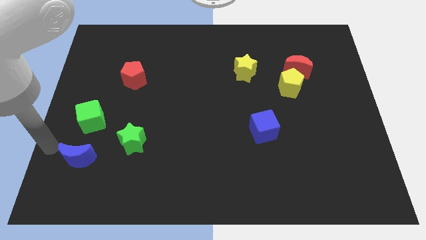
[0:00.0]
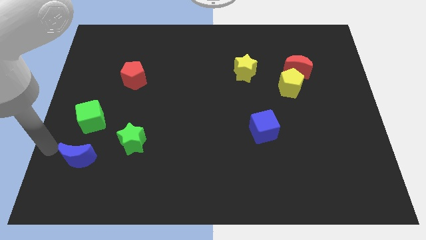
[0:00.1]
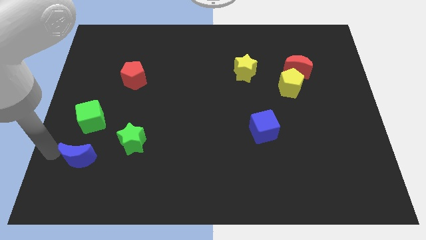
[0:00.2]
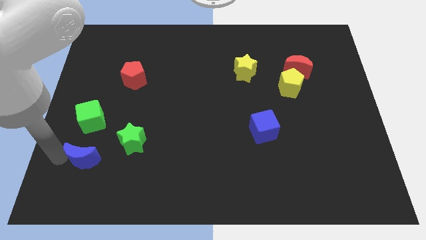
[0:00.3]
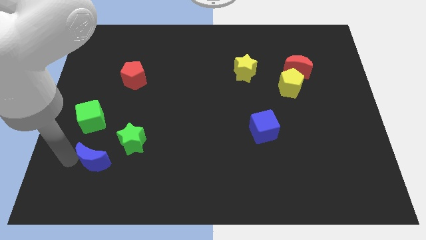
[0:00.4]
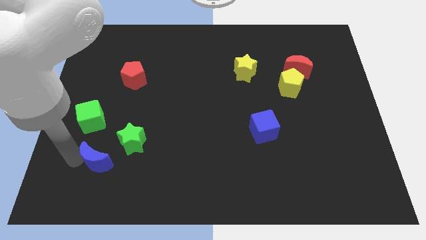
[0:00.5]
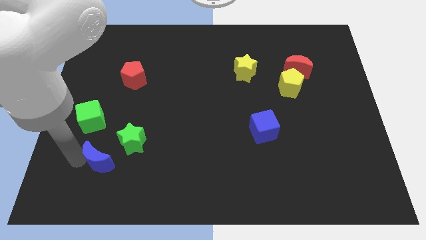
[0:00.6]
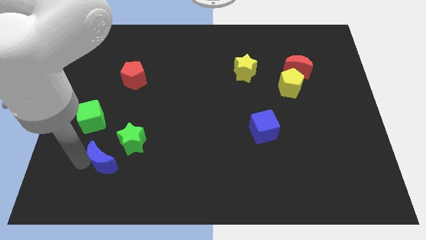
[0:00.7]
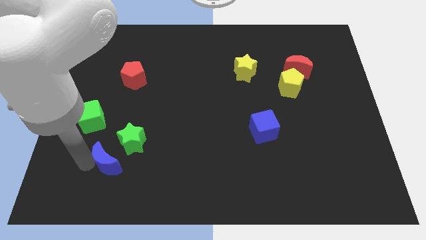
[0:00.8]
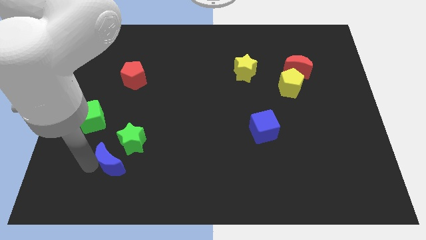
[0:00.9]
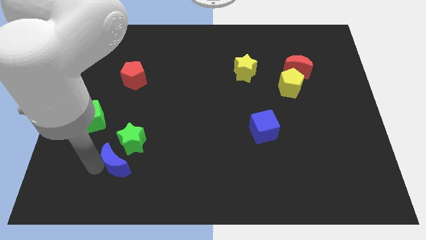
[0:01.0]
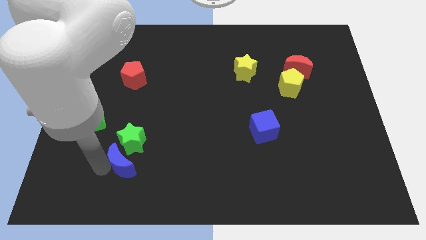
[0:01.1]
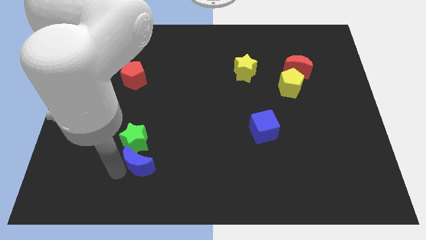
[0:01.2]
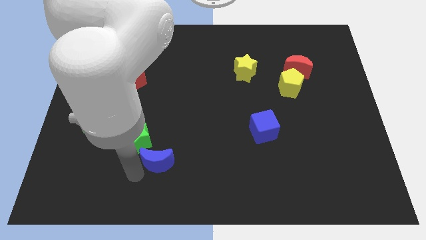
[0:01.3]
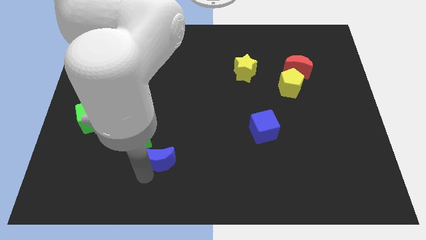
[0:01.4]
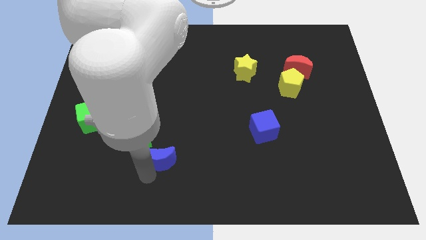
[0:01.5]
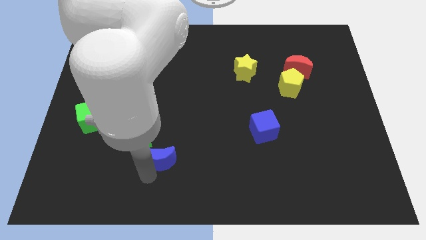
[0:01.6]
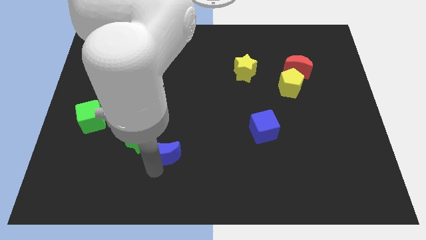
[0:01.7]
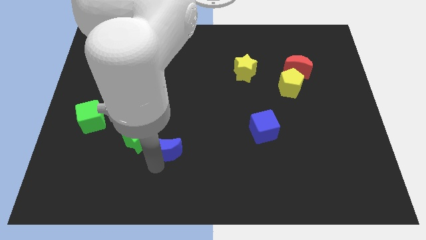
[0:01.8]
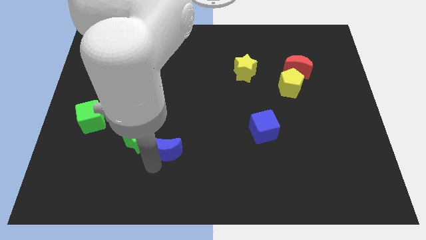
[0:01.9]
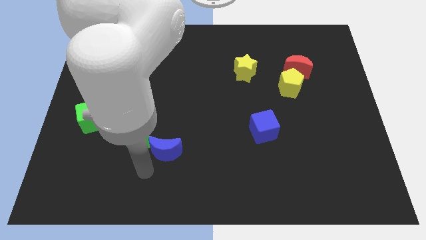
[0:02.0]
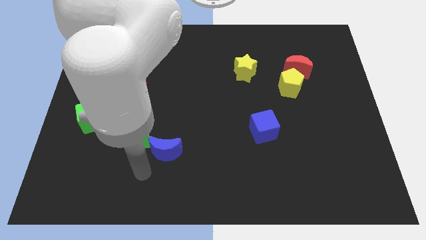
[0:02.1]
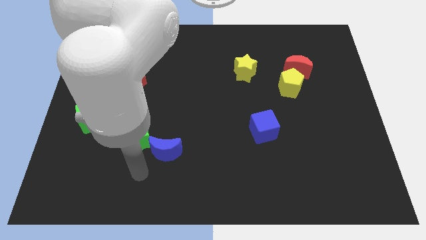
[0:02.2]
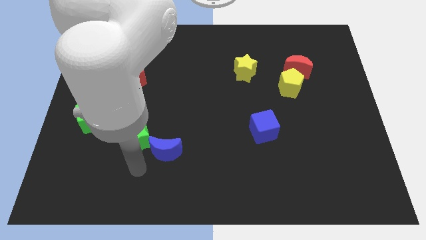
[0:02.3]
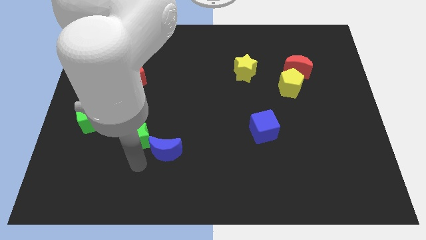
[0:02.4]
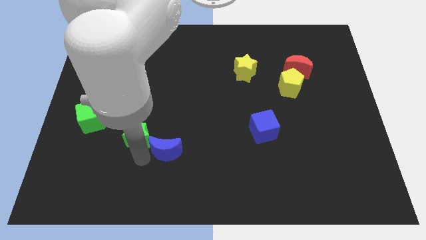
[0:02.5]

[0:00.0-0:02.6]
move the blue crescent right to the right to green star

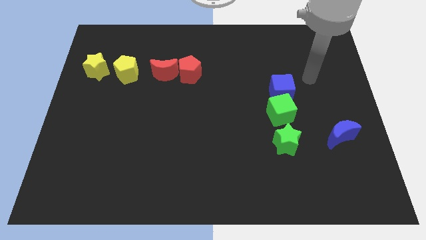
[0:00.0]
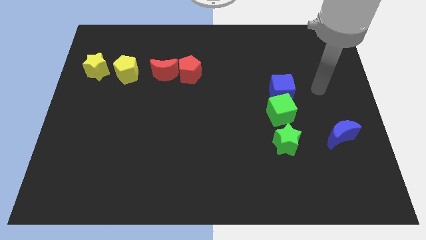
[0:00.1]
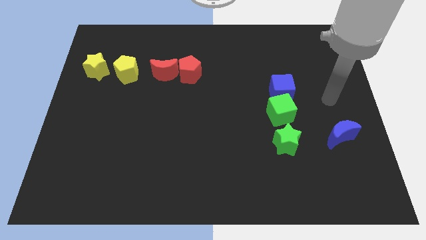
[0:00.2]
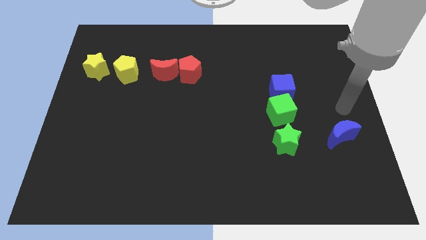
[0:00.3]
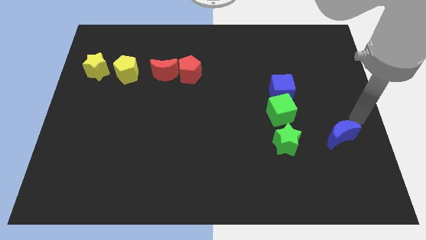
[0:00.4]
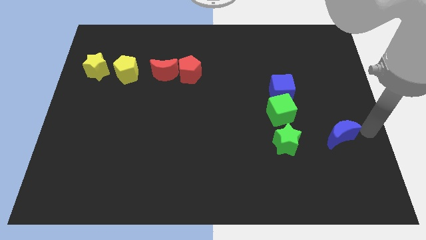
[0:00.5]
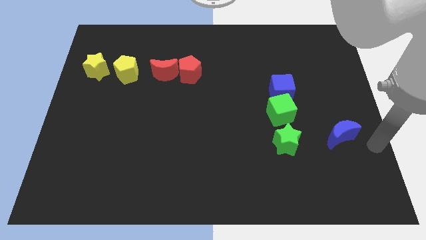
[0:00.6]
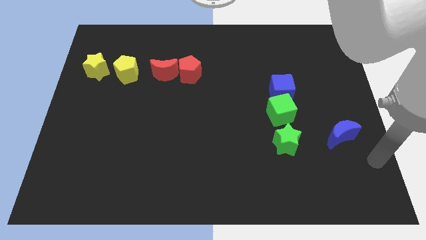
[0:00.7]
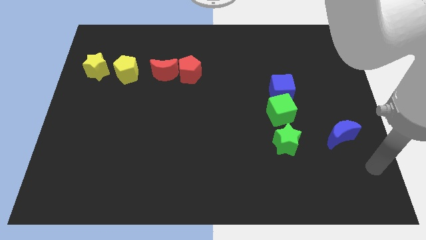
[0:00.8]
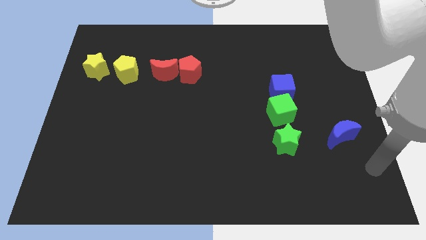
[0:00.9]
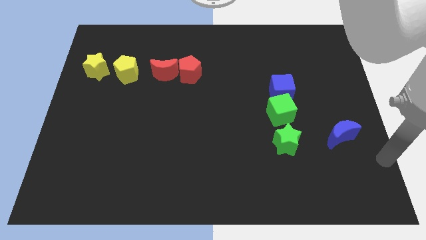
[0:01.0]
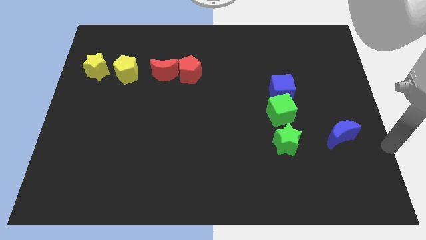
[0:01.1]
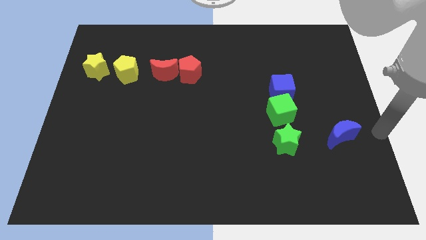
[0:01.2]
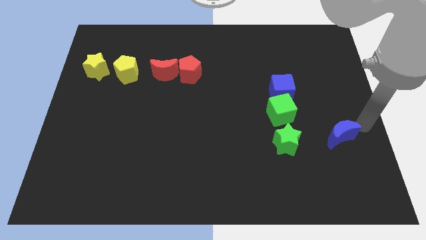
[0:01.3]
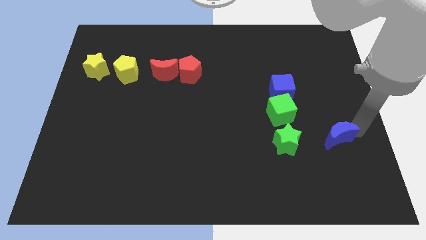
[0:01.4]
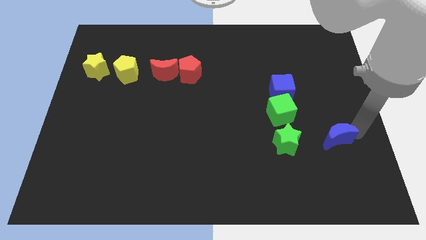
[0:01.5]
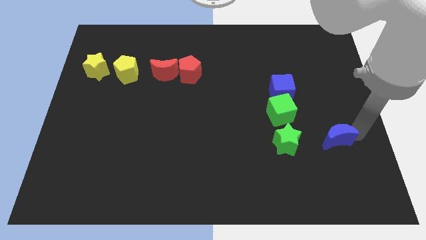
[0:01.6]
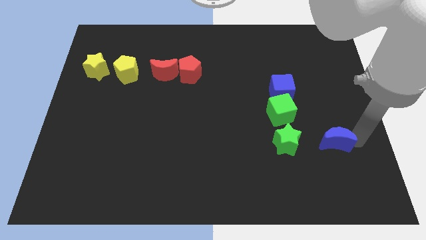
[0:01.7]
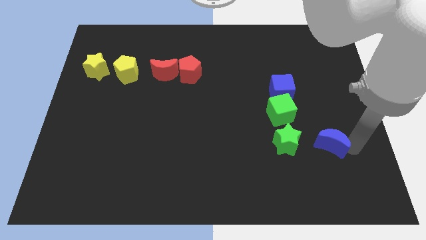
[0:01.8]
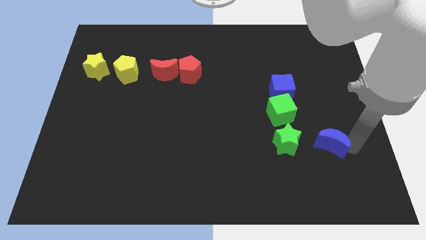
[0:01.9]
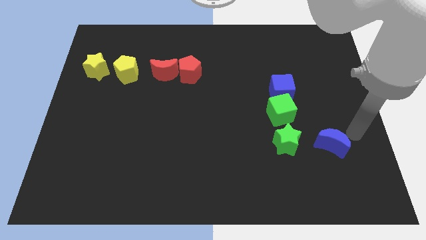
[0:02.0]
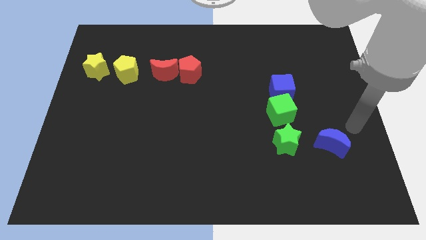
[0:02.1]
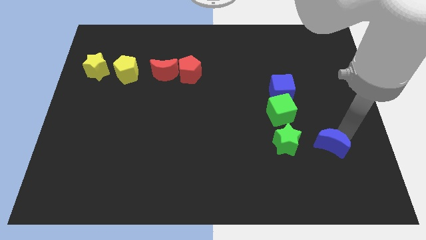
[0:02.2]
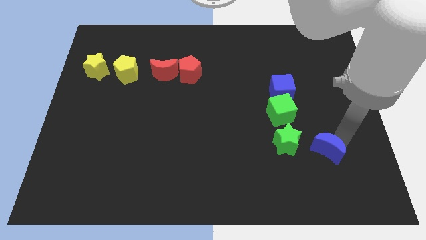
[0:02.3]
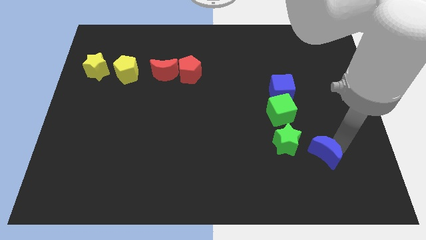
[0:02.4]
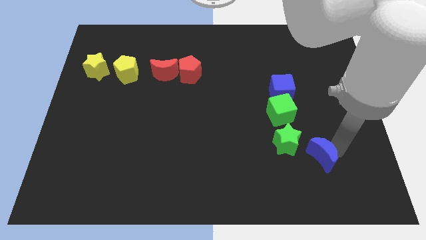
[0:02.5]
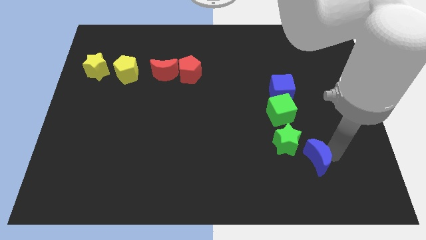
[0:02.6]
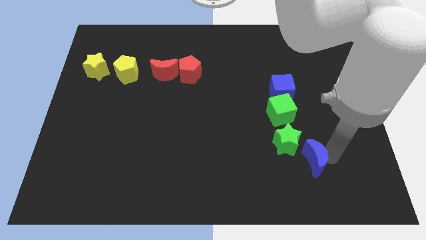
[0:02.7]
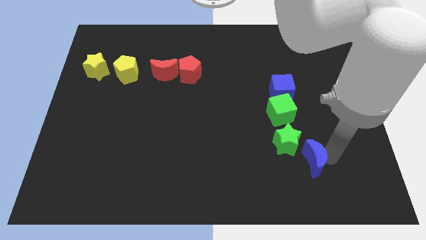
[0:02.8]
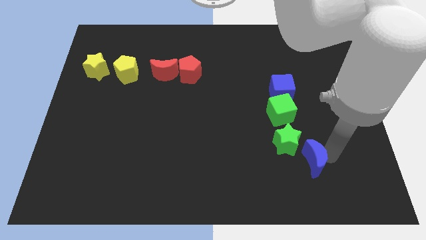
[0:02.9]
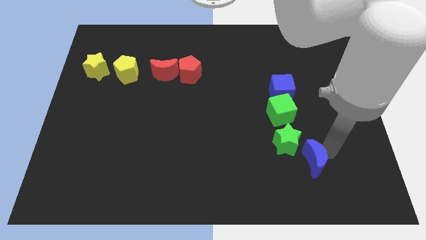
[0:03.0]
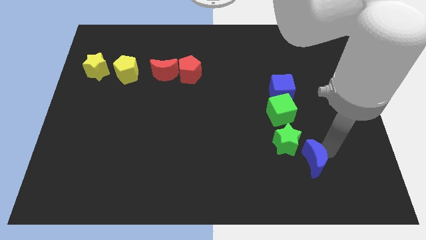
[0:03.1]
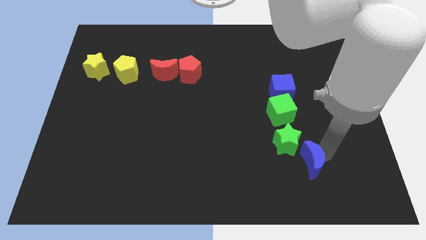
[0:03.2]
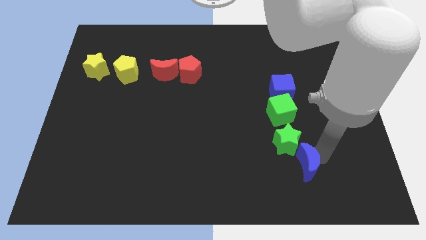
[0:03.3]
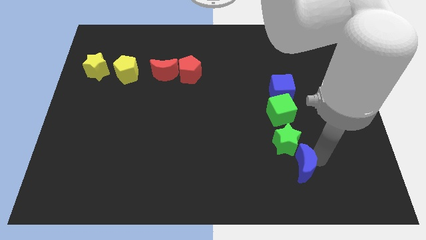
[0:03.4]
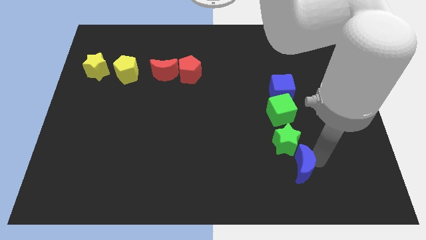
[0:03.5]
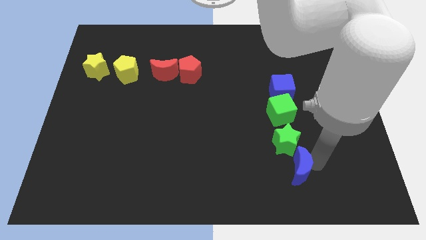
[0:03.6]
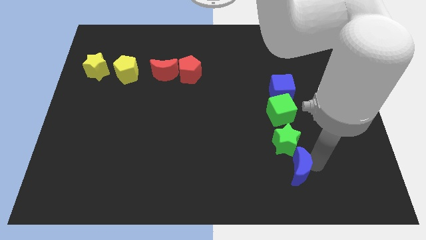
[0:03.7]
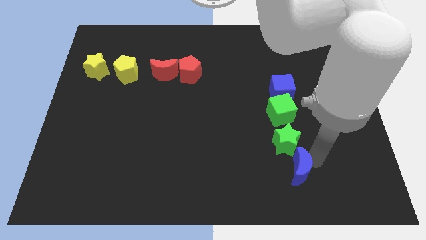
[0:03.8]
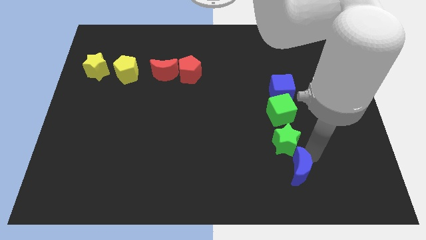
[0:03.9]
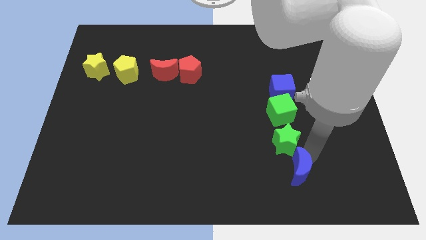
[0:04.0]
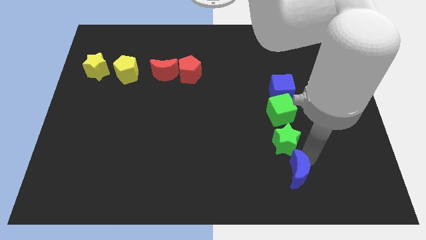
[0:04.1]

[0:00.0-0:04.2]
place the blue moon below the green star

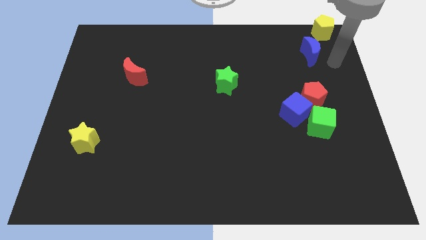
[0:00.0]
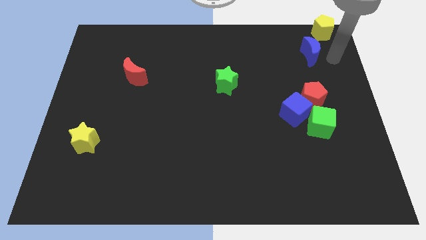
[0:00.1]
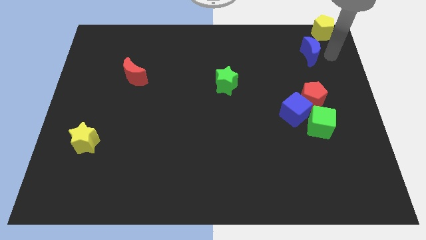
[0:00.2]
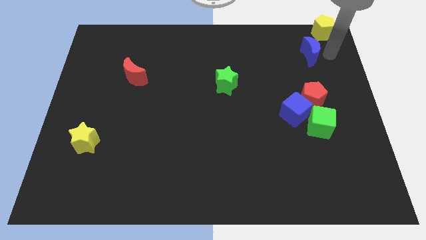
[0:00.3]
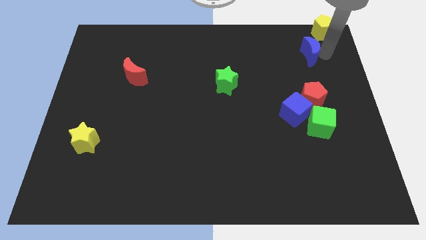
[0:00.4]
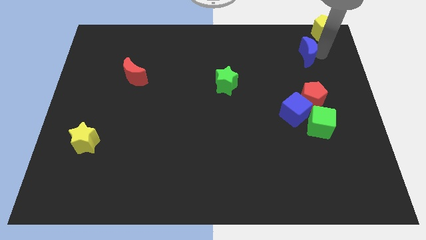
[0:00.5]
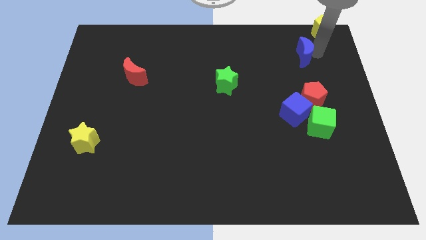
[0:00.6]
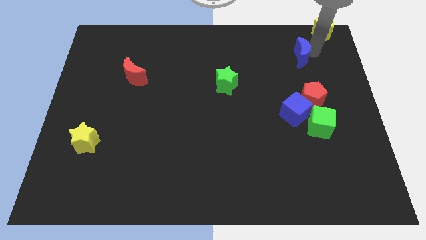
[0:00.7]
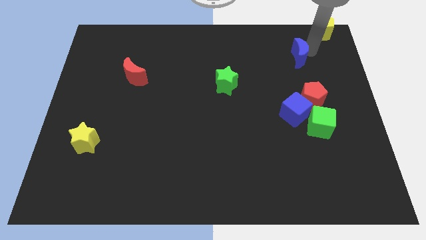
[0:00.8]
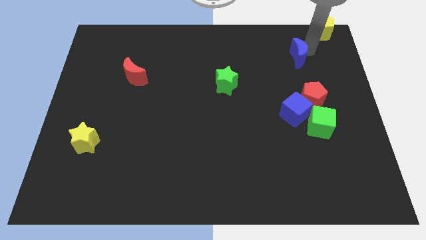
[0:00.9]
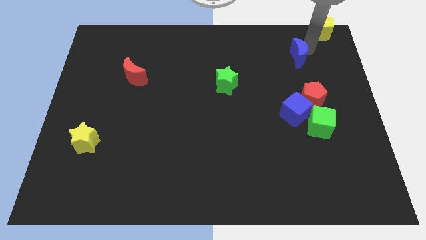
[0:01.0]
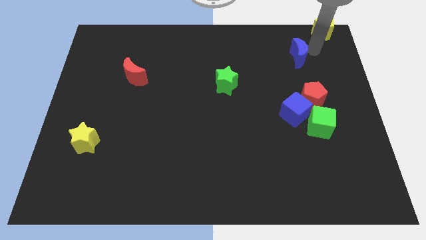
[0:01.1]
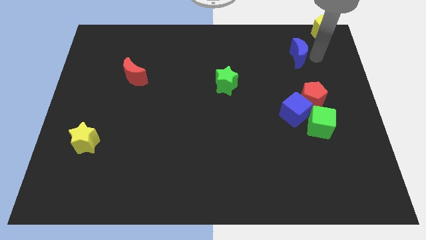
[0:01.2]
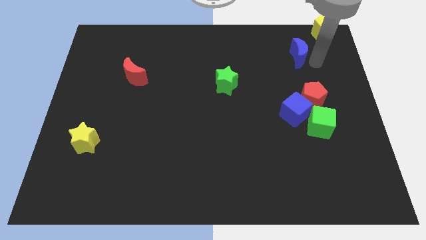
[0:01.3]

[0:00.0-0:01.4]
move blue moon away from yellow pentagon

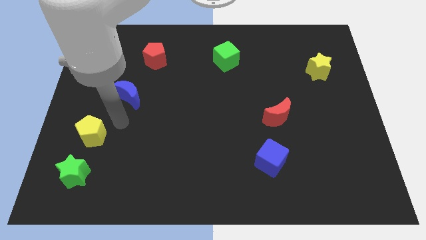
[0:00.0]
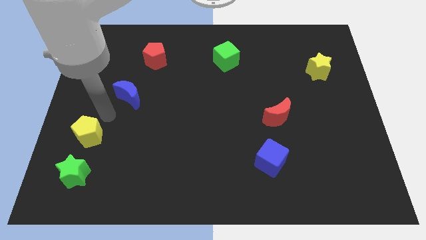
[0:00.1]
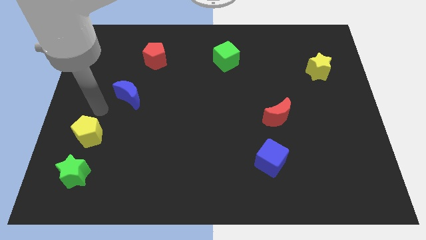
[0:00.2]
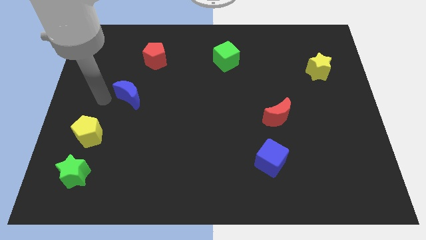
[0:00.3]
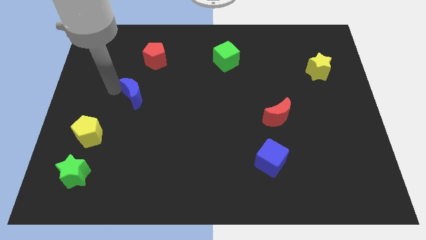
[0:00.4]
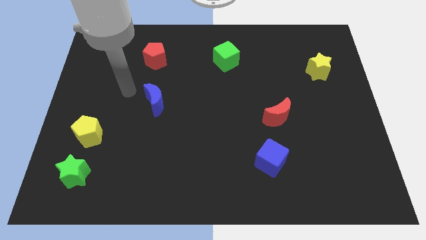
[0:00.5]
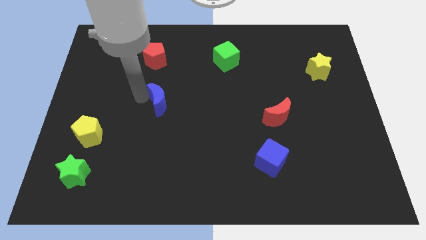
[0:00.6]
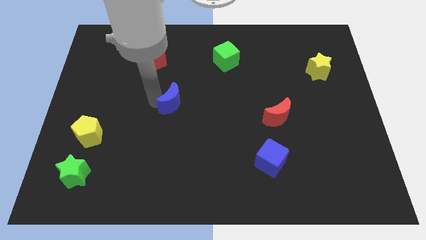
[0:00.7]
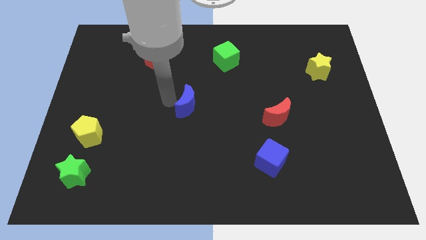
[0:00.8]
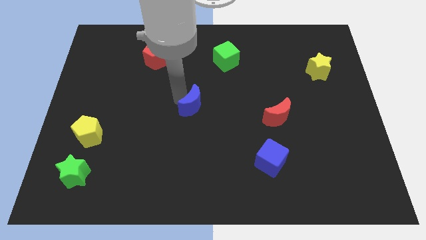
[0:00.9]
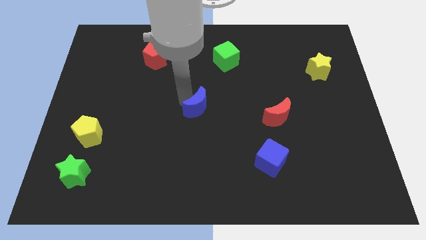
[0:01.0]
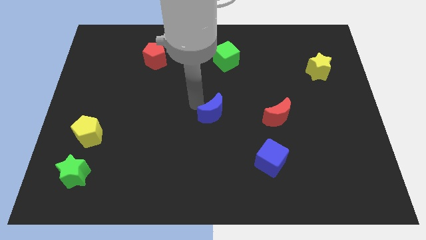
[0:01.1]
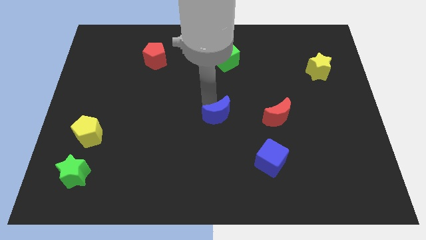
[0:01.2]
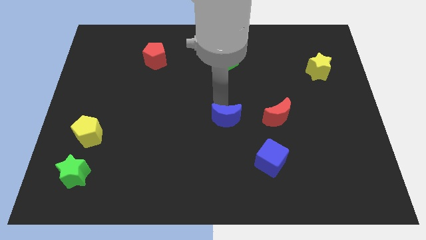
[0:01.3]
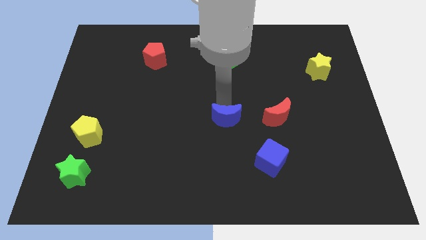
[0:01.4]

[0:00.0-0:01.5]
move the blue moon to the center of the board
